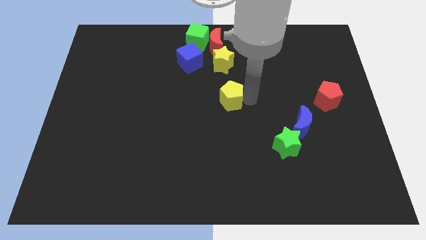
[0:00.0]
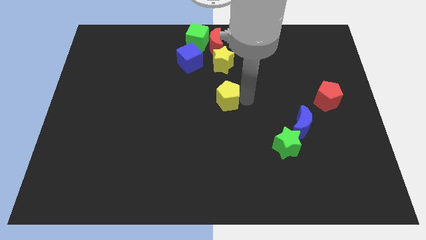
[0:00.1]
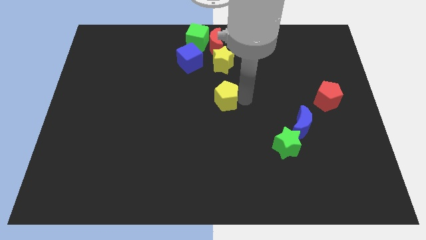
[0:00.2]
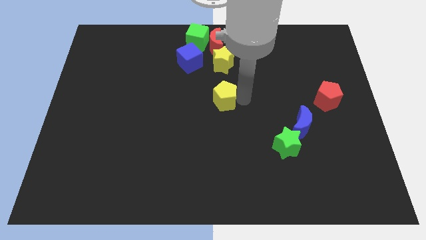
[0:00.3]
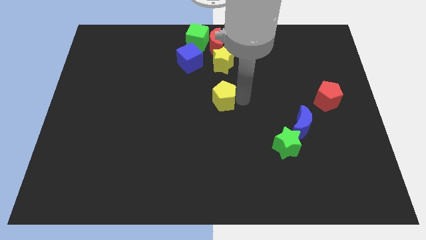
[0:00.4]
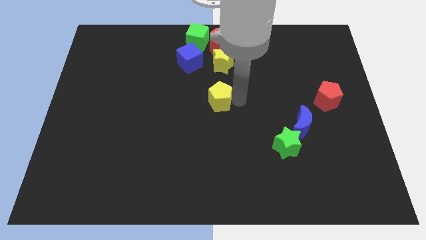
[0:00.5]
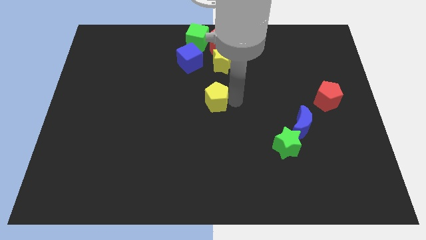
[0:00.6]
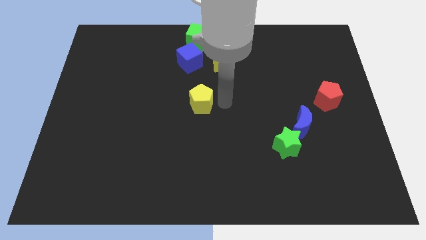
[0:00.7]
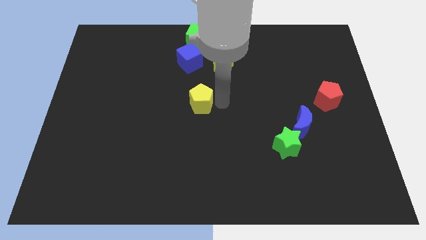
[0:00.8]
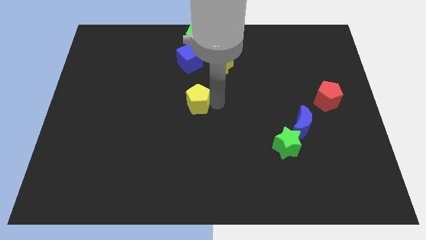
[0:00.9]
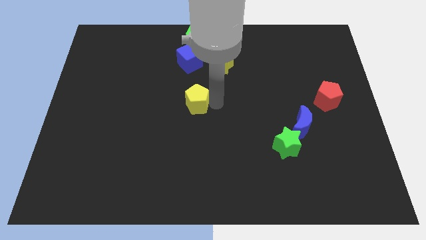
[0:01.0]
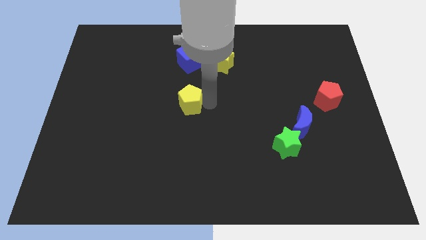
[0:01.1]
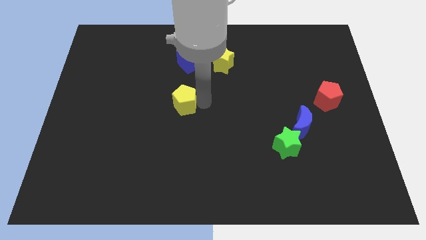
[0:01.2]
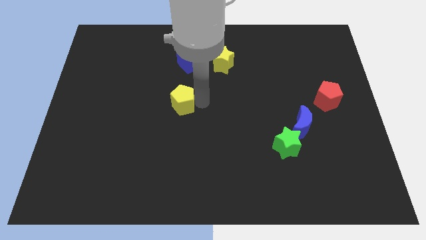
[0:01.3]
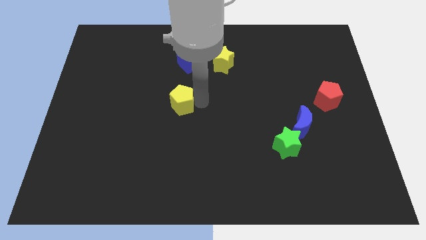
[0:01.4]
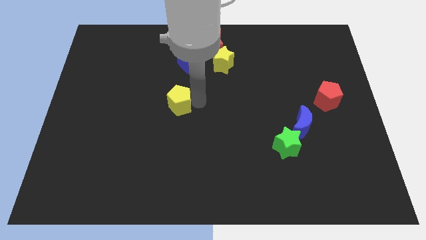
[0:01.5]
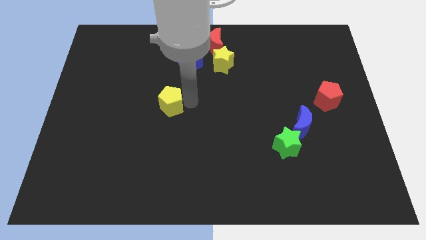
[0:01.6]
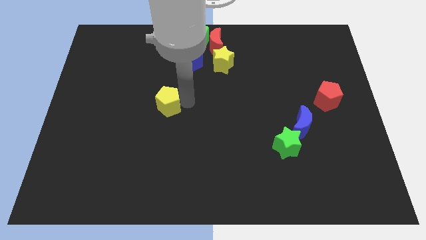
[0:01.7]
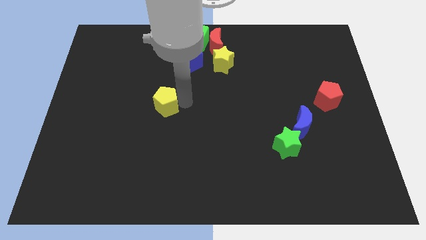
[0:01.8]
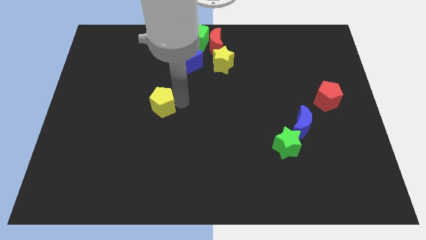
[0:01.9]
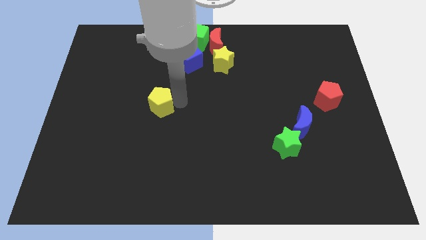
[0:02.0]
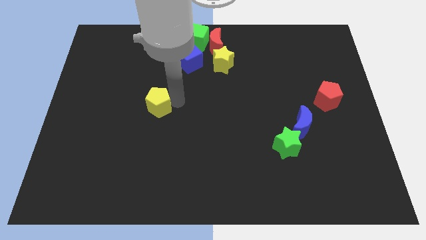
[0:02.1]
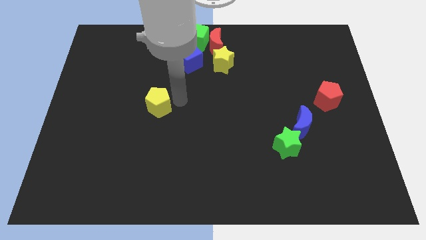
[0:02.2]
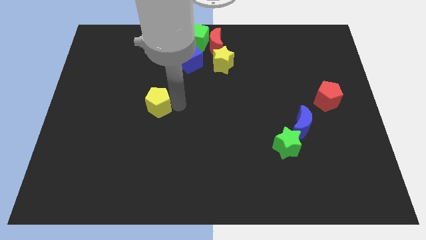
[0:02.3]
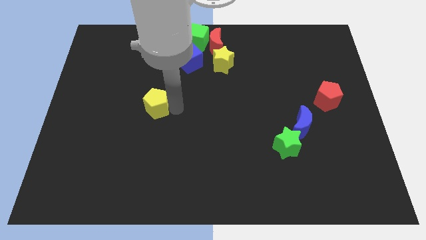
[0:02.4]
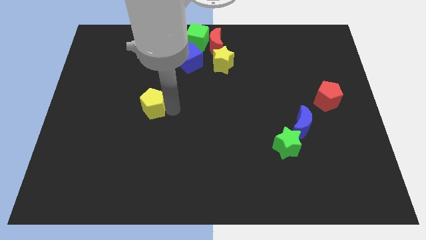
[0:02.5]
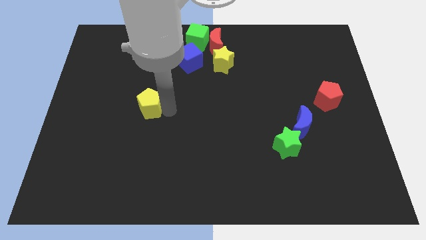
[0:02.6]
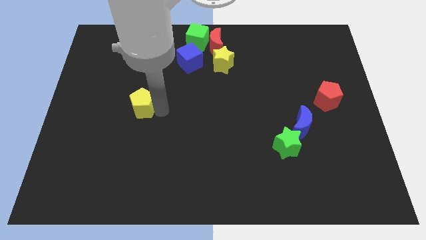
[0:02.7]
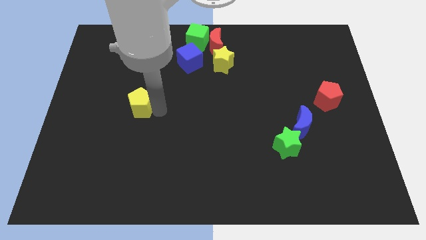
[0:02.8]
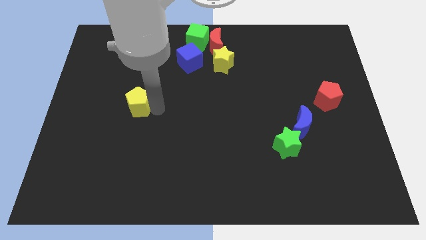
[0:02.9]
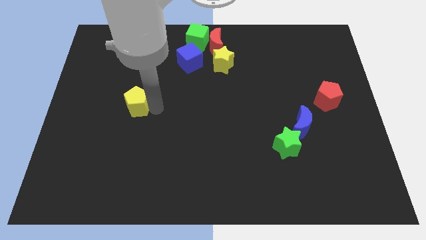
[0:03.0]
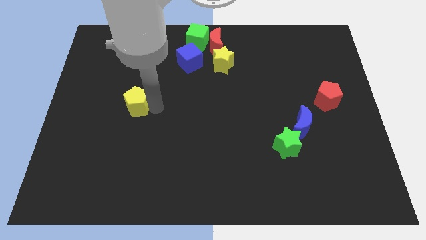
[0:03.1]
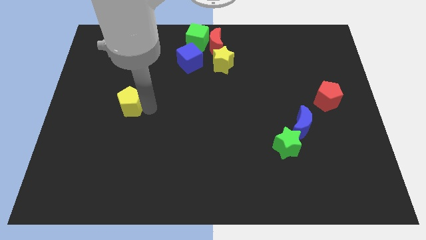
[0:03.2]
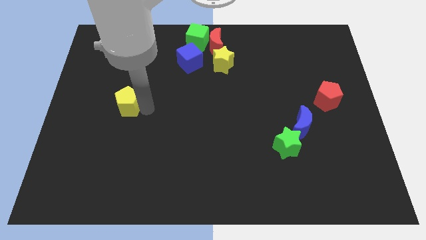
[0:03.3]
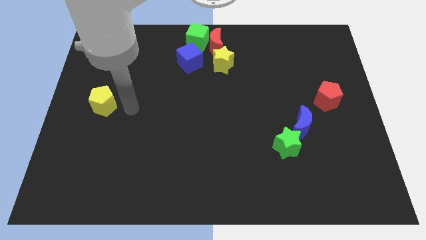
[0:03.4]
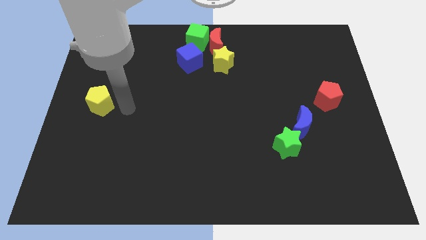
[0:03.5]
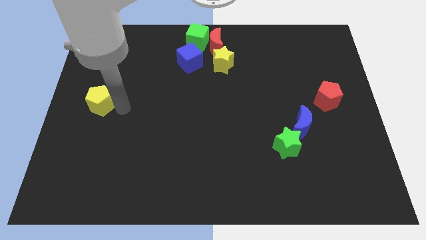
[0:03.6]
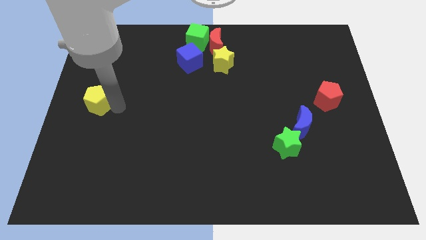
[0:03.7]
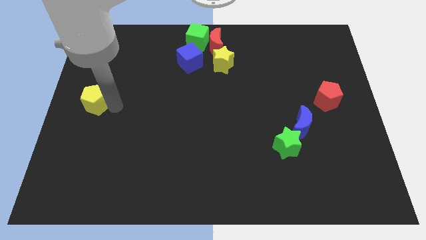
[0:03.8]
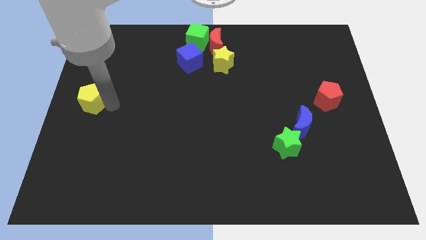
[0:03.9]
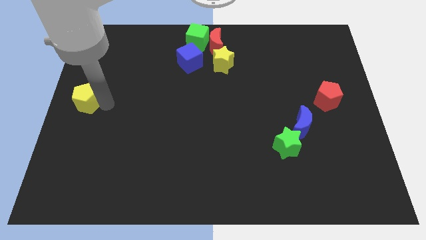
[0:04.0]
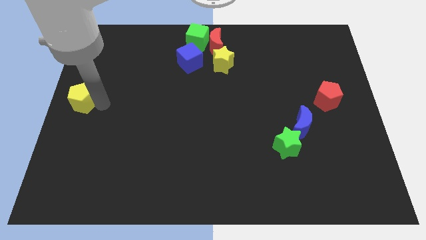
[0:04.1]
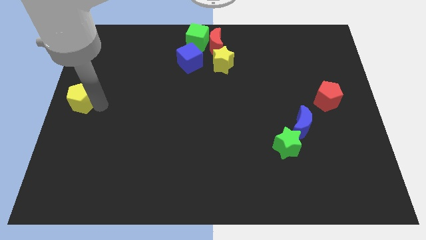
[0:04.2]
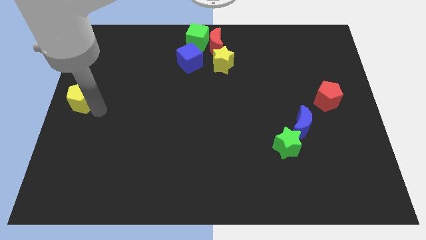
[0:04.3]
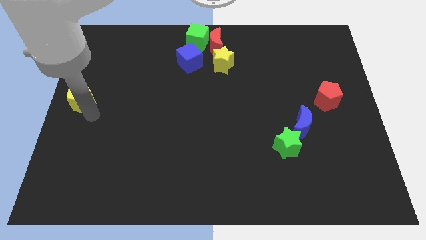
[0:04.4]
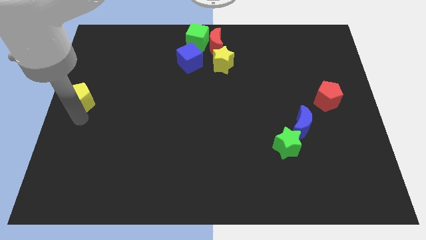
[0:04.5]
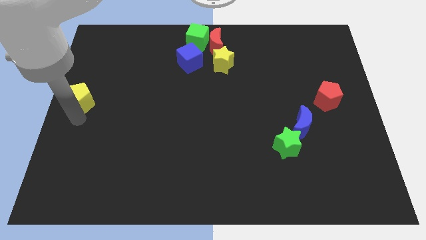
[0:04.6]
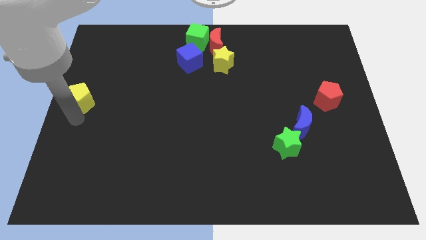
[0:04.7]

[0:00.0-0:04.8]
push the yellow pentagon towards the center left side of the board

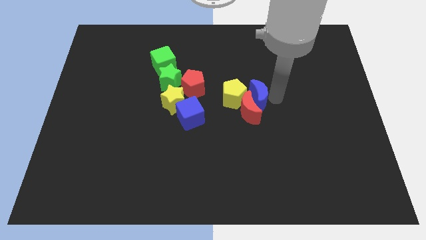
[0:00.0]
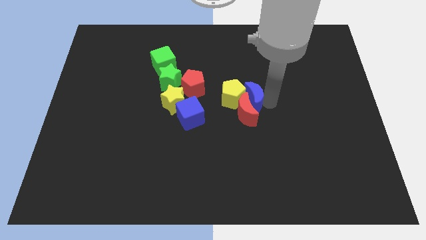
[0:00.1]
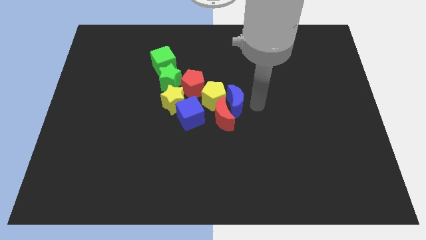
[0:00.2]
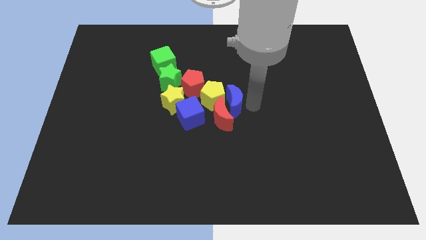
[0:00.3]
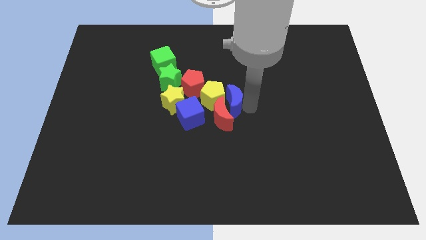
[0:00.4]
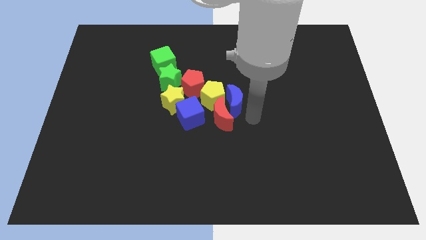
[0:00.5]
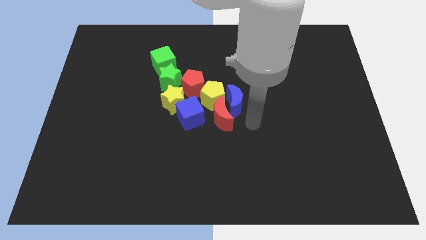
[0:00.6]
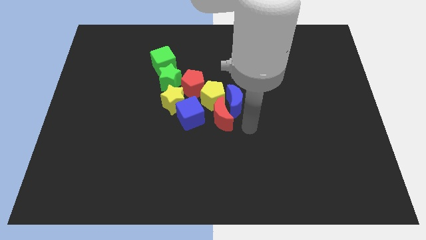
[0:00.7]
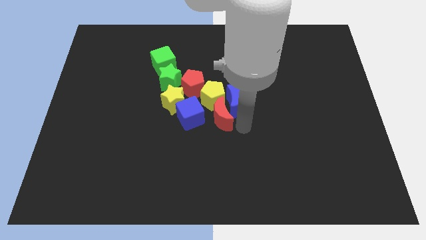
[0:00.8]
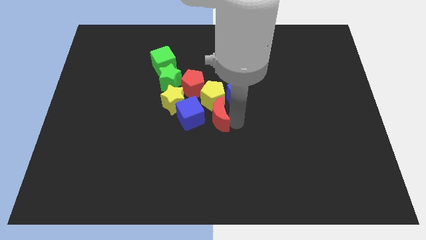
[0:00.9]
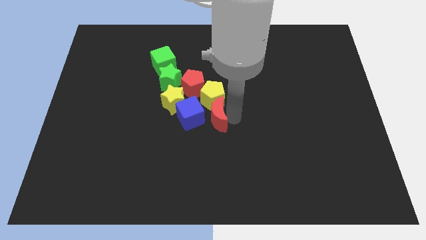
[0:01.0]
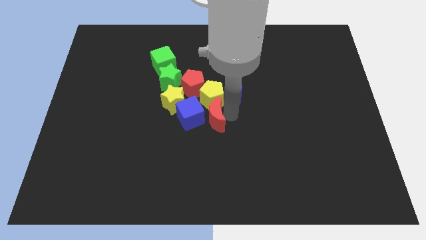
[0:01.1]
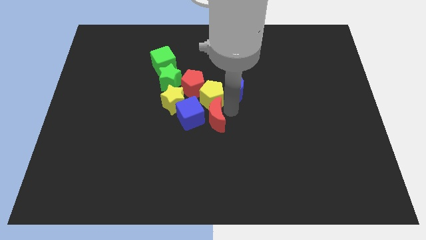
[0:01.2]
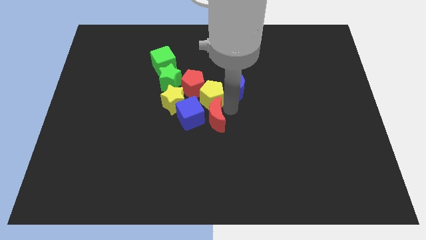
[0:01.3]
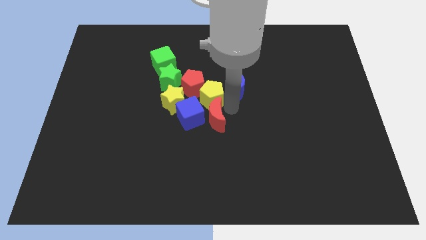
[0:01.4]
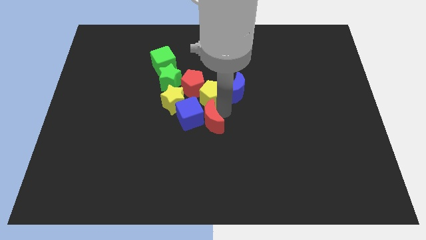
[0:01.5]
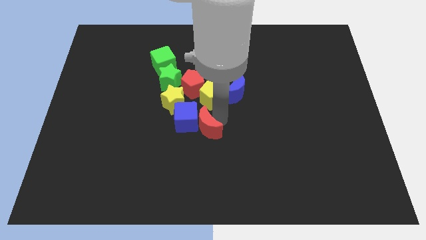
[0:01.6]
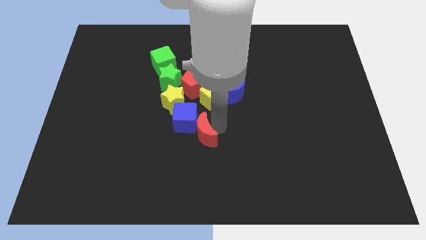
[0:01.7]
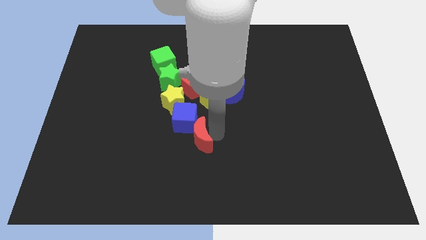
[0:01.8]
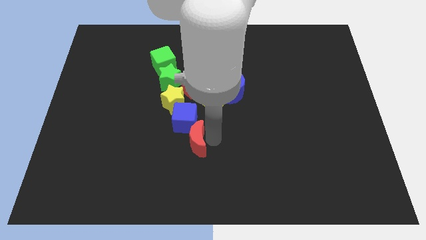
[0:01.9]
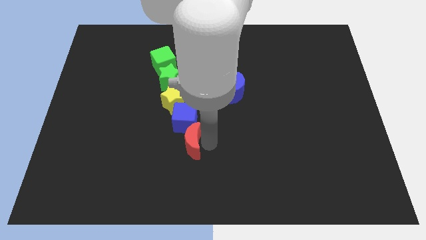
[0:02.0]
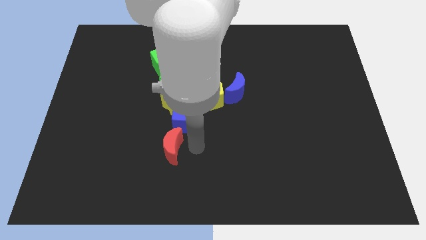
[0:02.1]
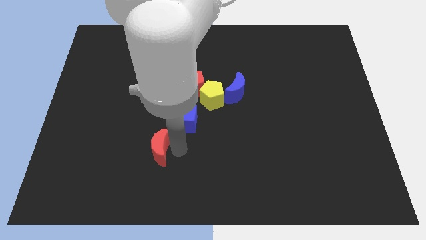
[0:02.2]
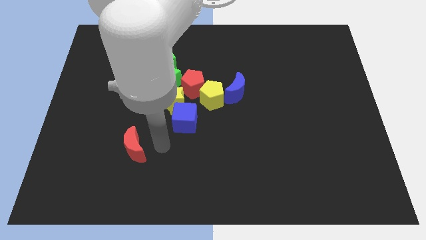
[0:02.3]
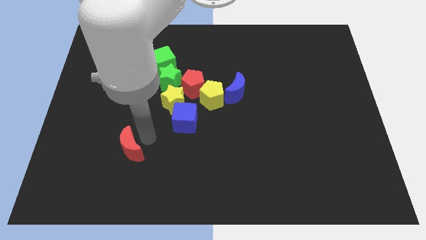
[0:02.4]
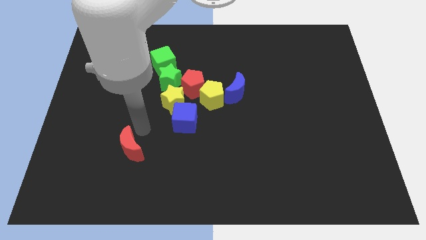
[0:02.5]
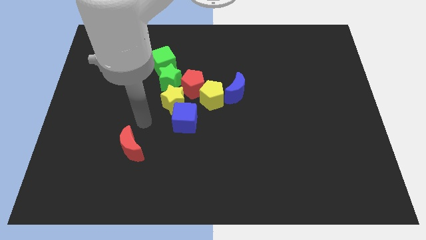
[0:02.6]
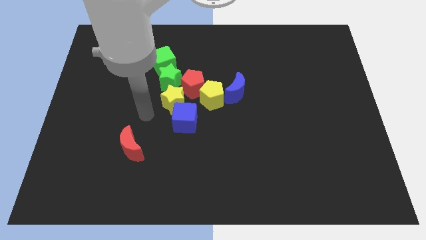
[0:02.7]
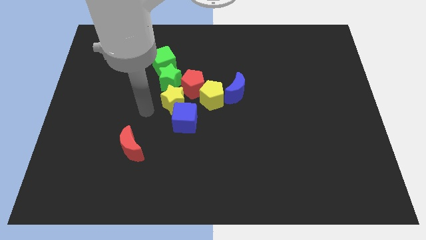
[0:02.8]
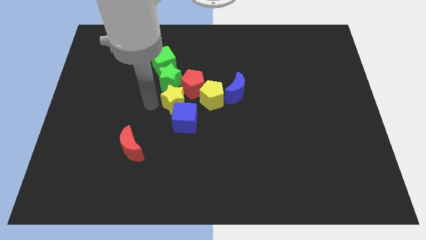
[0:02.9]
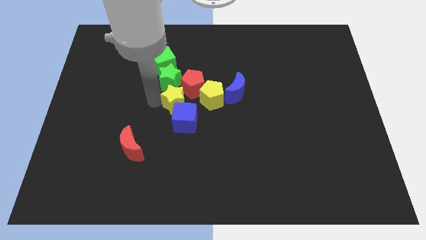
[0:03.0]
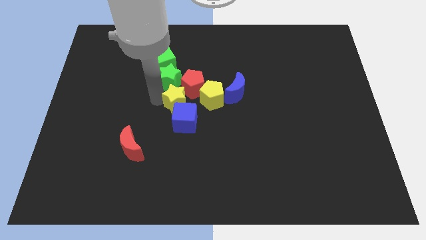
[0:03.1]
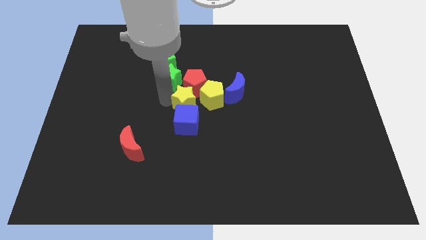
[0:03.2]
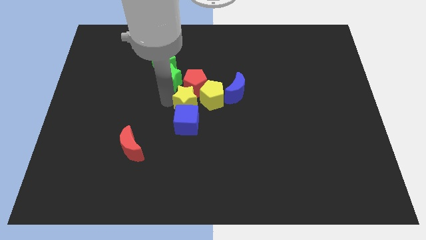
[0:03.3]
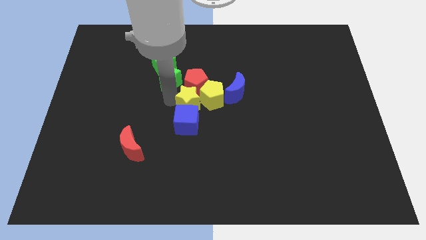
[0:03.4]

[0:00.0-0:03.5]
place yellow star to the left of yellow pentagon

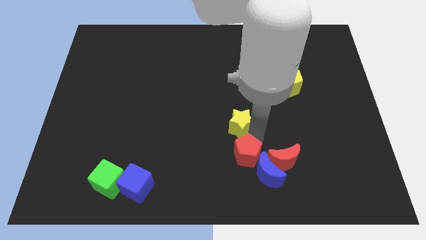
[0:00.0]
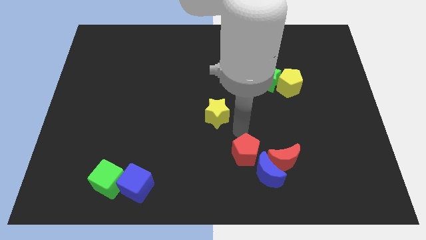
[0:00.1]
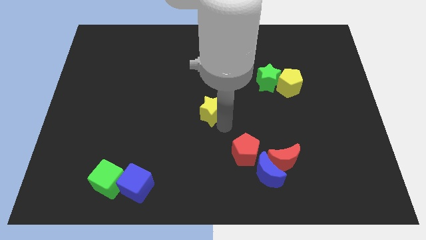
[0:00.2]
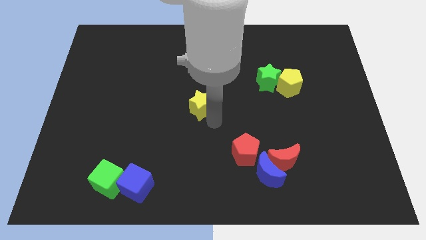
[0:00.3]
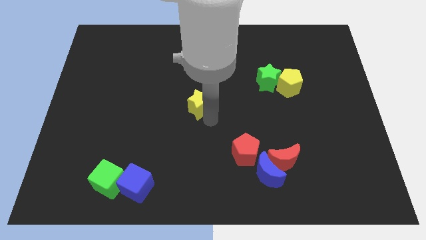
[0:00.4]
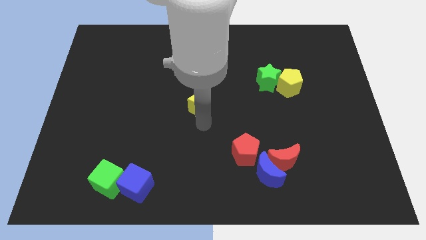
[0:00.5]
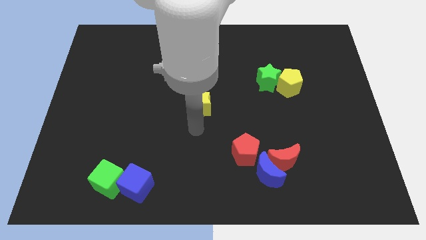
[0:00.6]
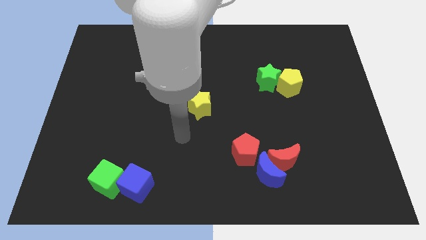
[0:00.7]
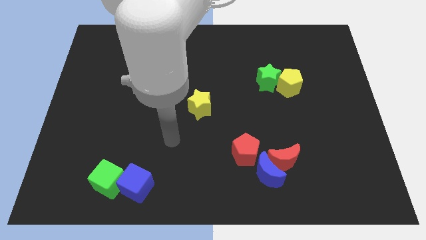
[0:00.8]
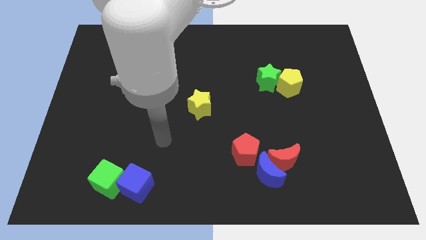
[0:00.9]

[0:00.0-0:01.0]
place the yellow star diagonal to the blue cube
